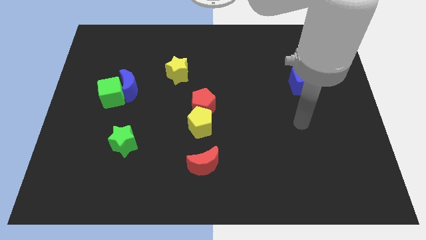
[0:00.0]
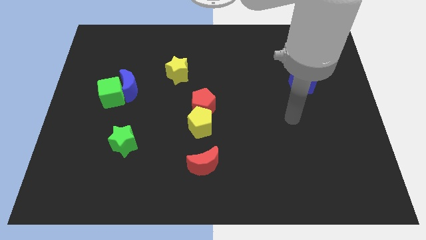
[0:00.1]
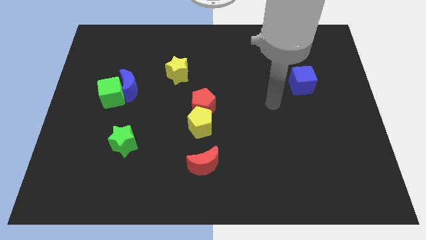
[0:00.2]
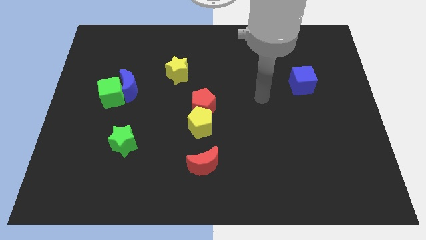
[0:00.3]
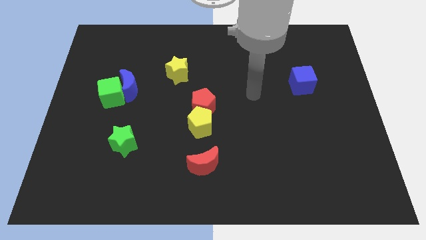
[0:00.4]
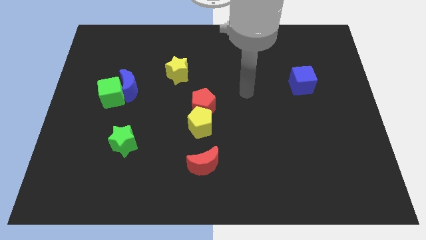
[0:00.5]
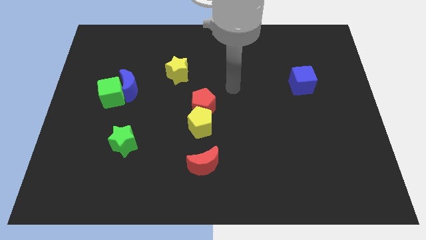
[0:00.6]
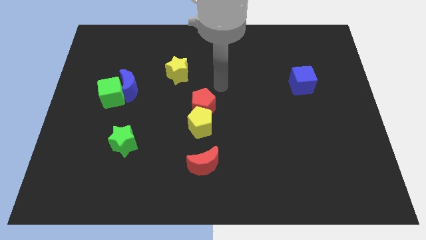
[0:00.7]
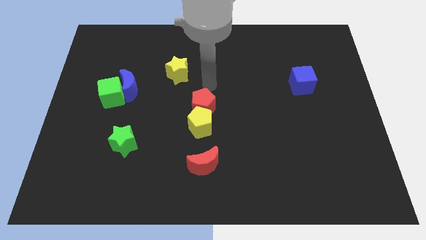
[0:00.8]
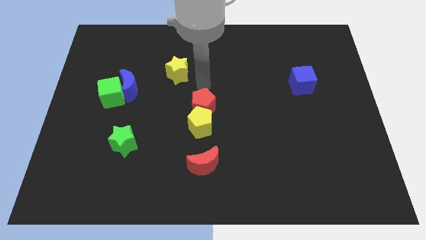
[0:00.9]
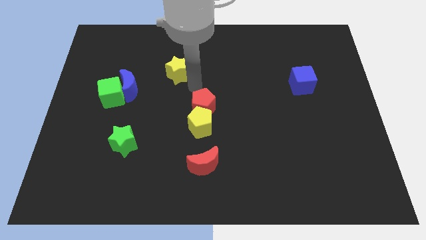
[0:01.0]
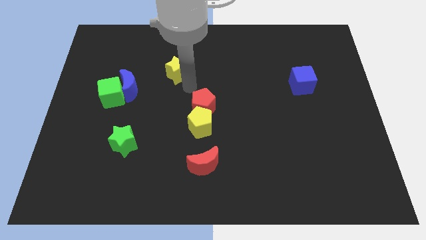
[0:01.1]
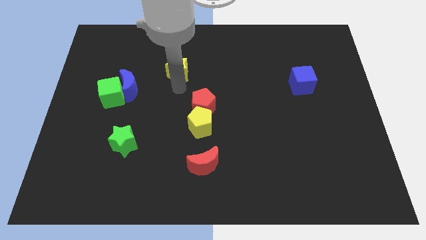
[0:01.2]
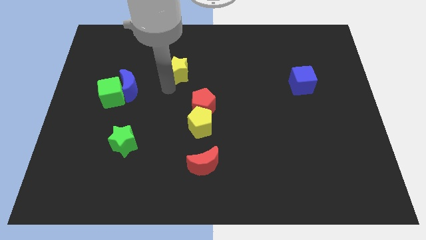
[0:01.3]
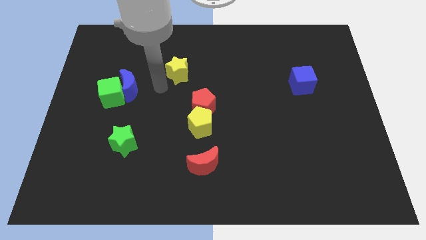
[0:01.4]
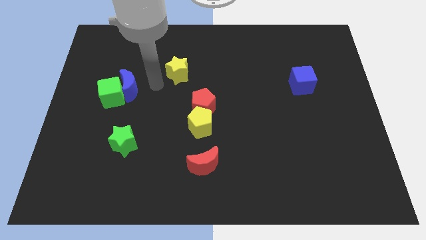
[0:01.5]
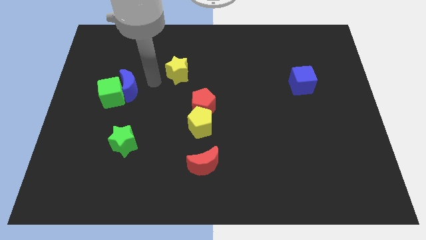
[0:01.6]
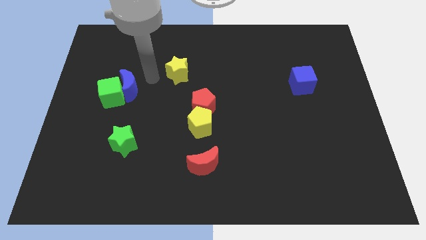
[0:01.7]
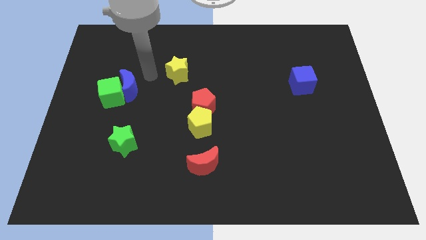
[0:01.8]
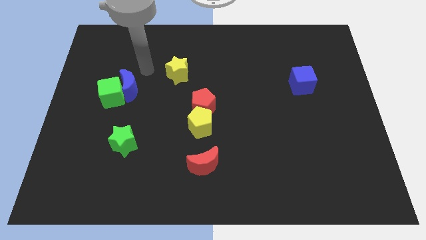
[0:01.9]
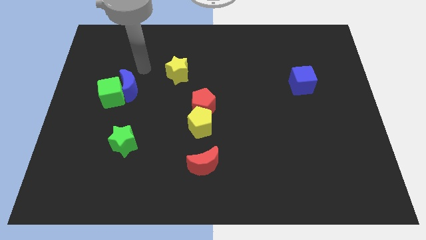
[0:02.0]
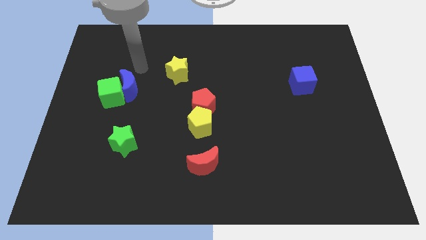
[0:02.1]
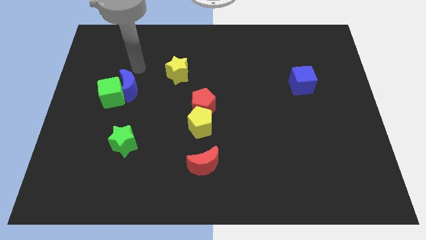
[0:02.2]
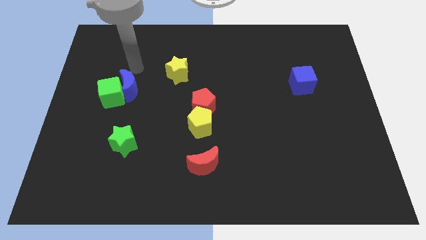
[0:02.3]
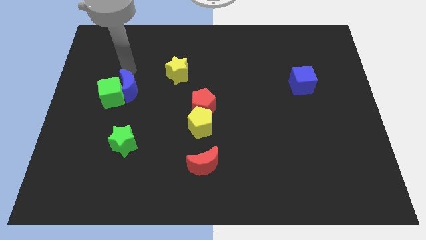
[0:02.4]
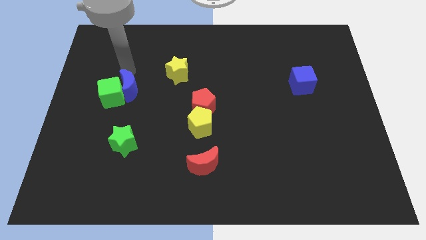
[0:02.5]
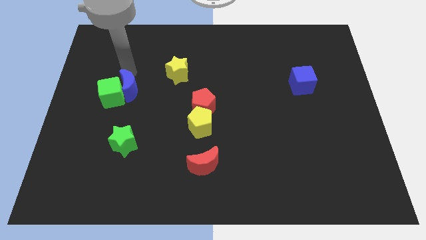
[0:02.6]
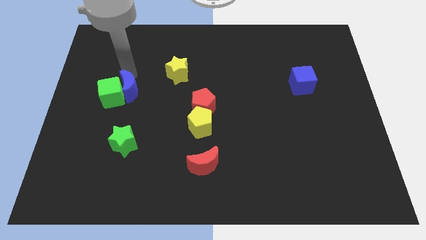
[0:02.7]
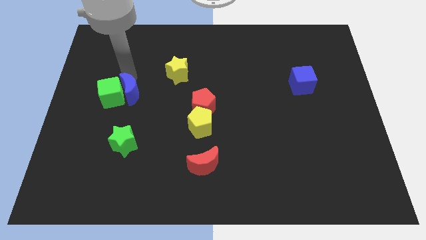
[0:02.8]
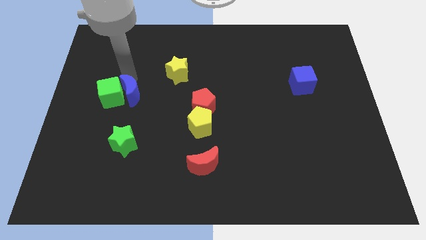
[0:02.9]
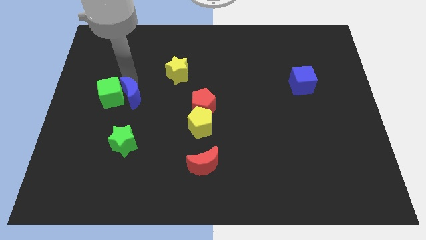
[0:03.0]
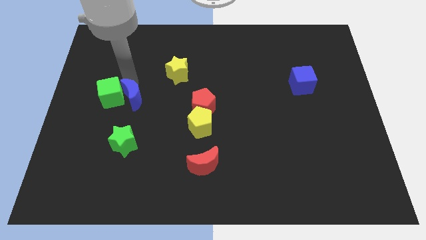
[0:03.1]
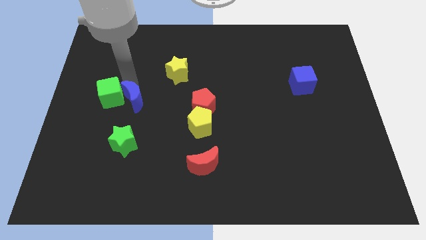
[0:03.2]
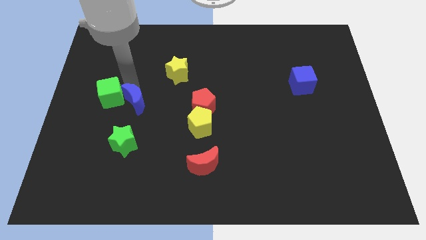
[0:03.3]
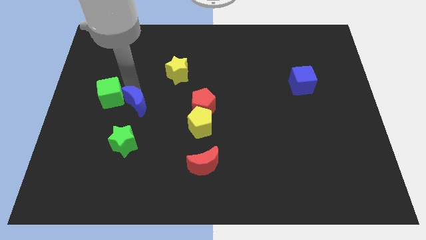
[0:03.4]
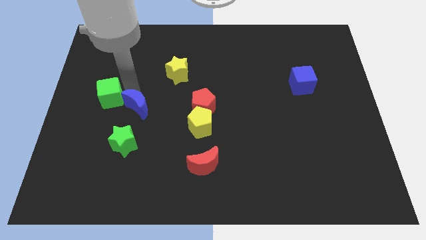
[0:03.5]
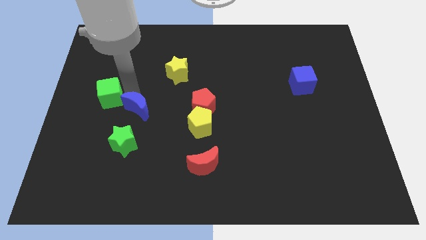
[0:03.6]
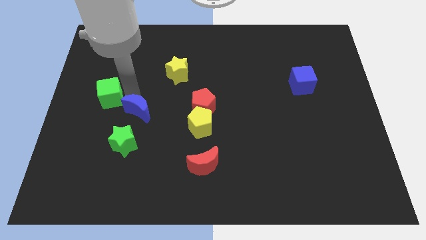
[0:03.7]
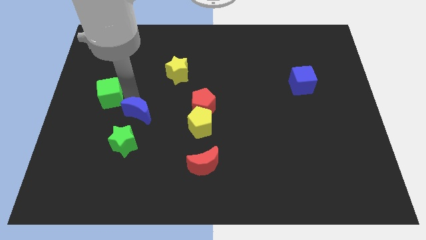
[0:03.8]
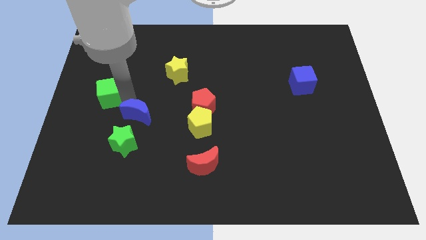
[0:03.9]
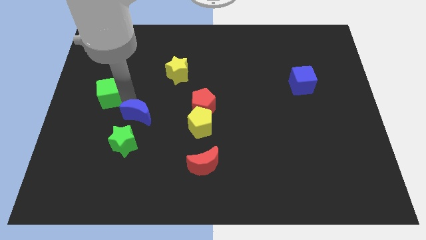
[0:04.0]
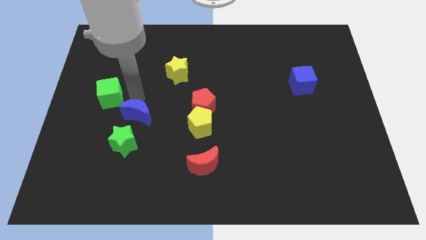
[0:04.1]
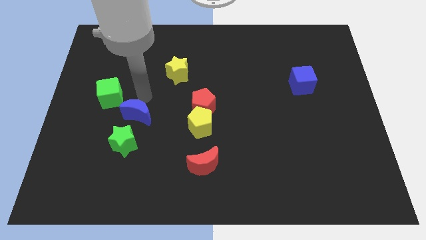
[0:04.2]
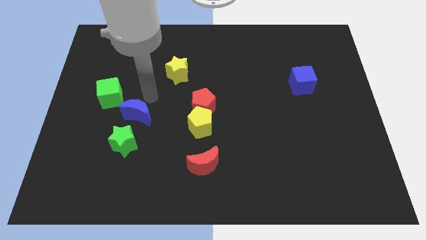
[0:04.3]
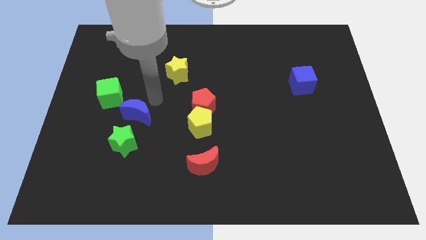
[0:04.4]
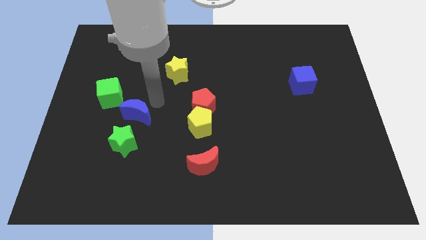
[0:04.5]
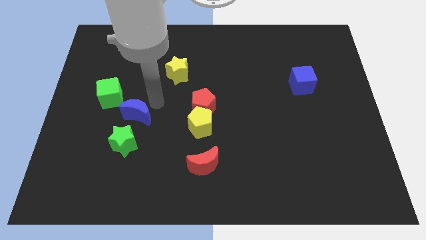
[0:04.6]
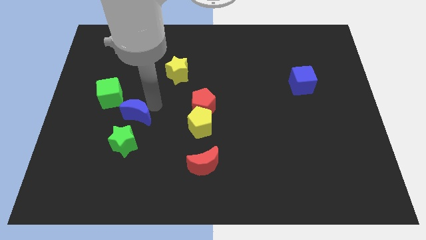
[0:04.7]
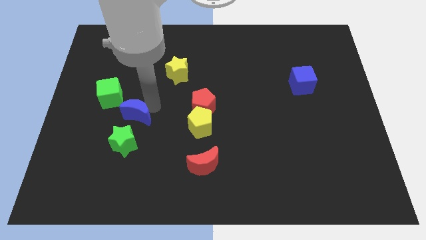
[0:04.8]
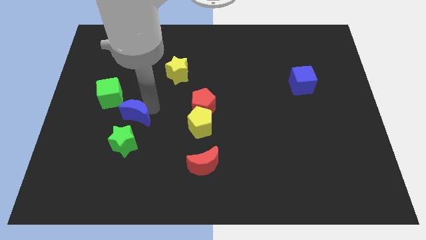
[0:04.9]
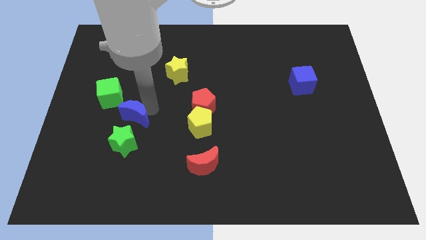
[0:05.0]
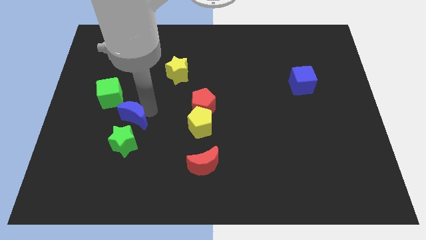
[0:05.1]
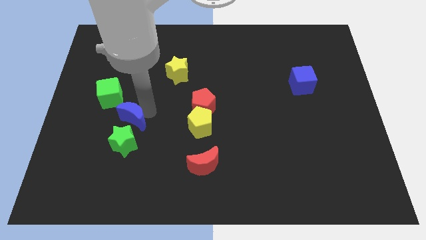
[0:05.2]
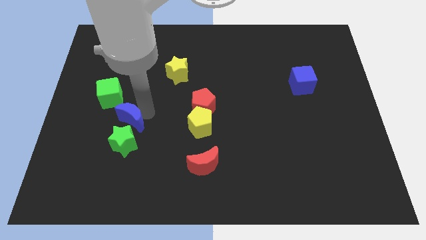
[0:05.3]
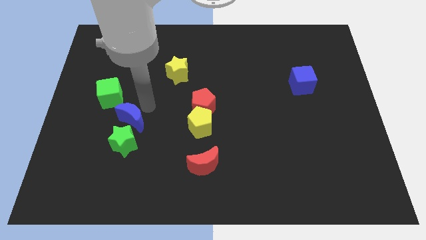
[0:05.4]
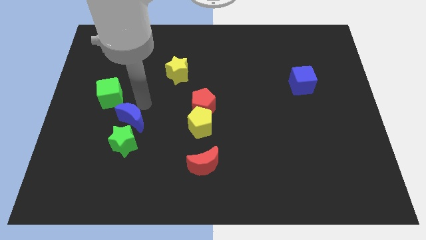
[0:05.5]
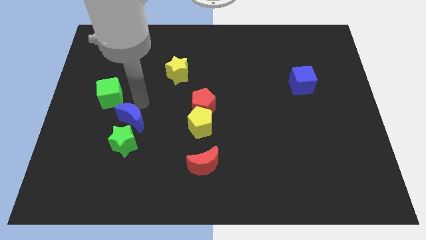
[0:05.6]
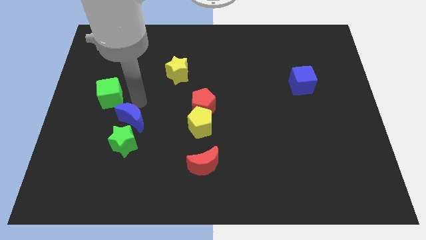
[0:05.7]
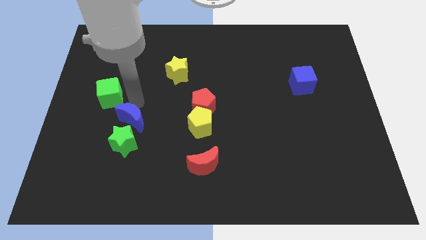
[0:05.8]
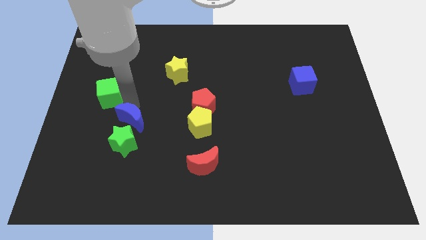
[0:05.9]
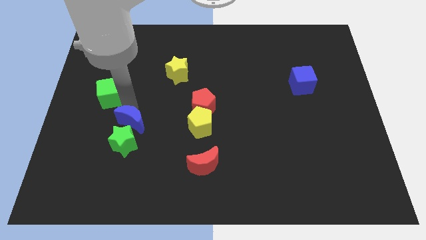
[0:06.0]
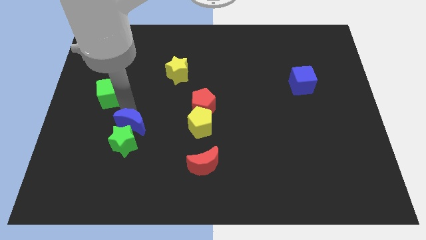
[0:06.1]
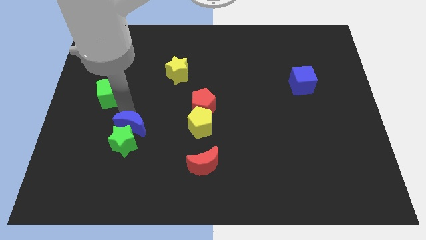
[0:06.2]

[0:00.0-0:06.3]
slide the blue moon next to the green star

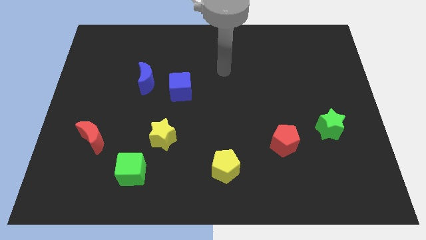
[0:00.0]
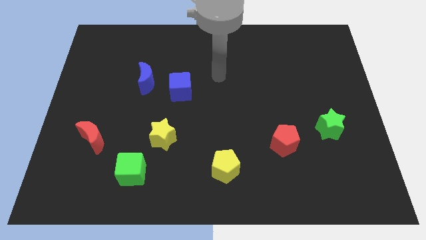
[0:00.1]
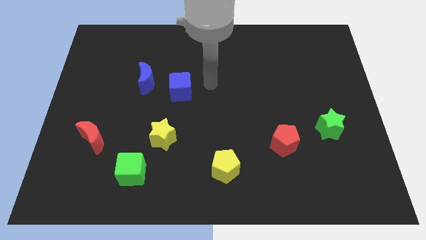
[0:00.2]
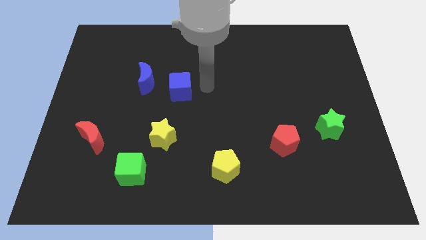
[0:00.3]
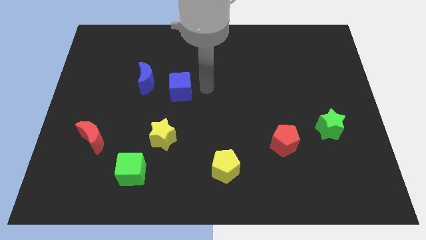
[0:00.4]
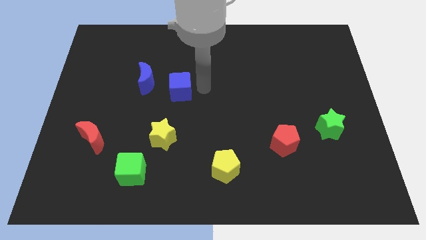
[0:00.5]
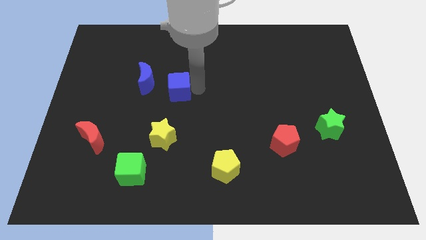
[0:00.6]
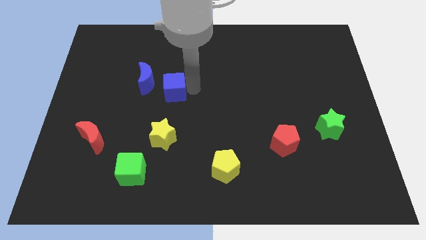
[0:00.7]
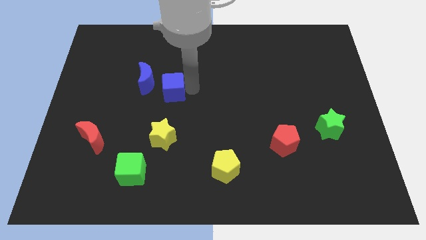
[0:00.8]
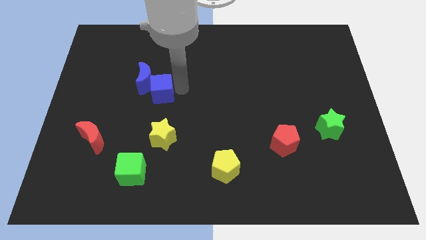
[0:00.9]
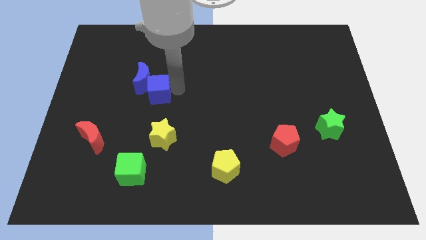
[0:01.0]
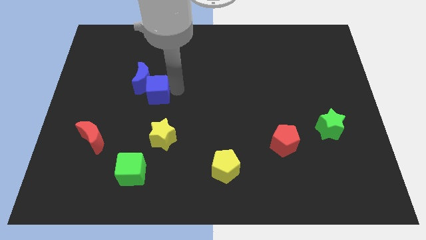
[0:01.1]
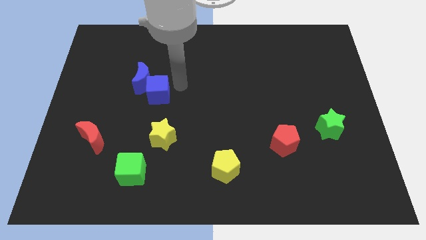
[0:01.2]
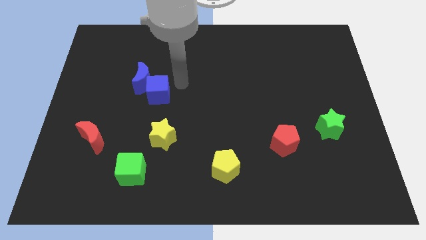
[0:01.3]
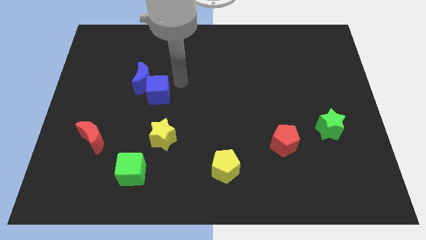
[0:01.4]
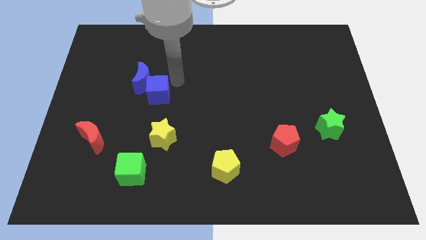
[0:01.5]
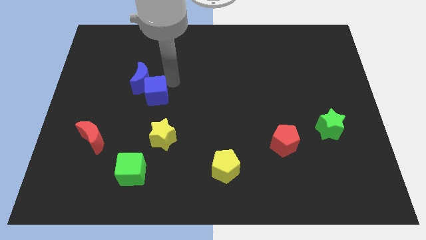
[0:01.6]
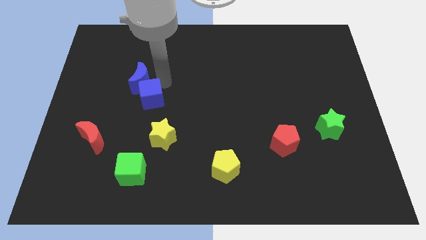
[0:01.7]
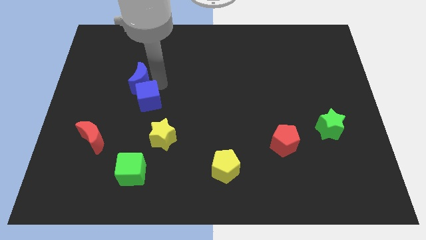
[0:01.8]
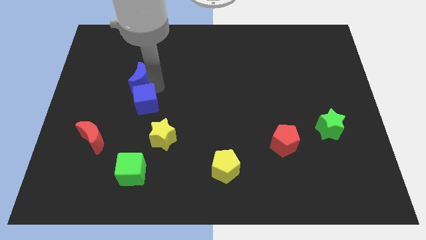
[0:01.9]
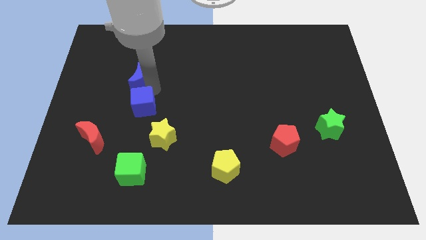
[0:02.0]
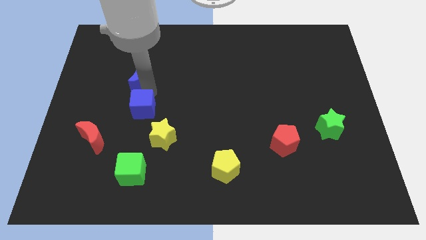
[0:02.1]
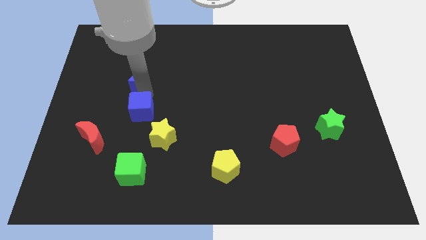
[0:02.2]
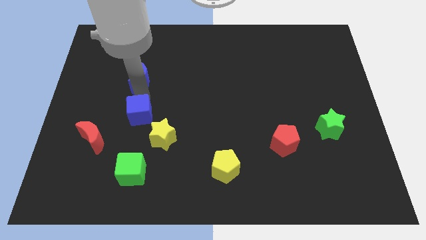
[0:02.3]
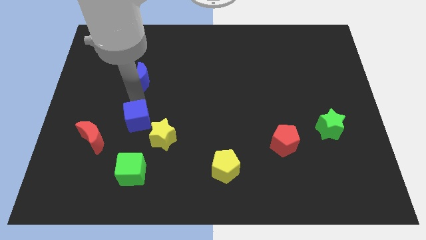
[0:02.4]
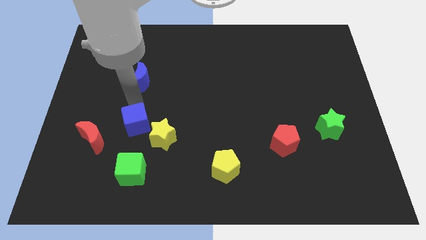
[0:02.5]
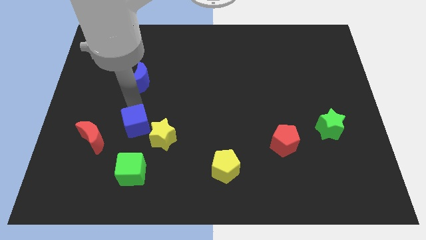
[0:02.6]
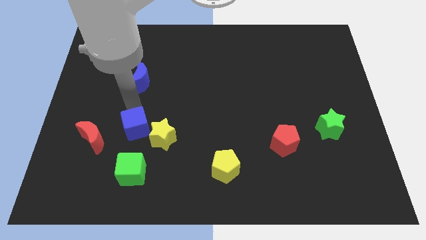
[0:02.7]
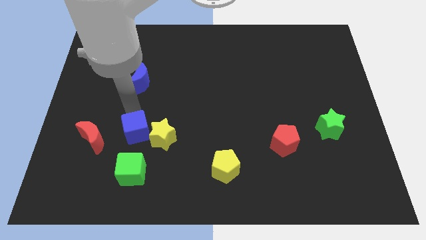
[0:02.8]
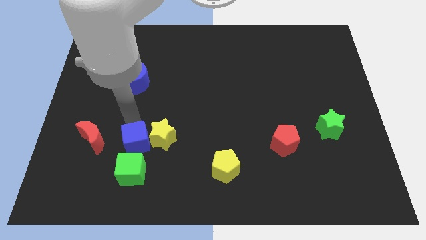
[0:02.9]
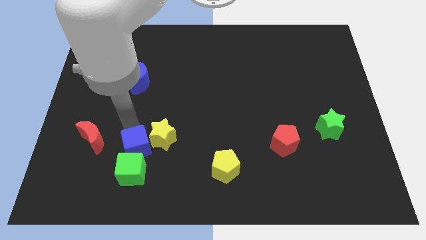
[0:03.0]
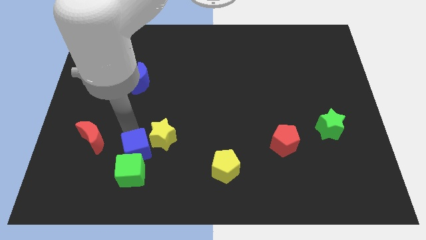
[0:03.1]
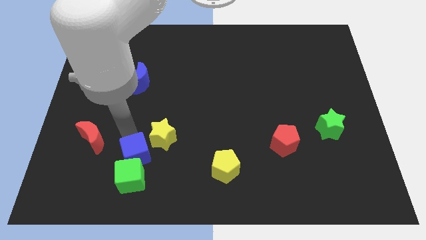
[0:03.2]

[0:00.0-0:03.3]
push the blue cube to the green cube
